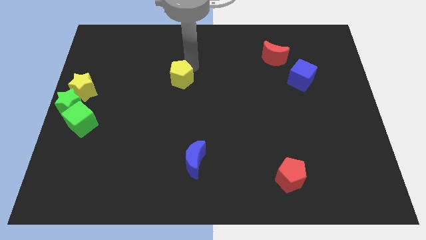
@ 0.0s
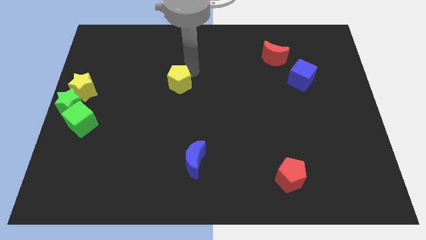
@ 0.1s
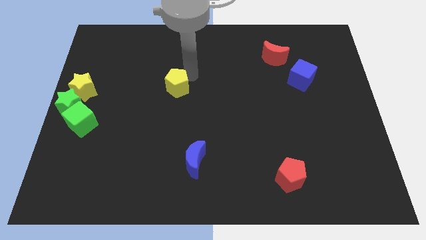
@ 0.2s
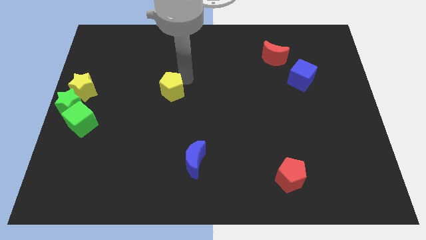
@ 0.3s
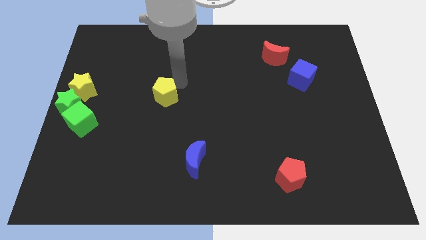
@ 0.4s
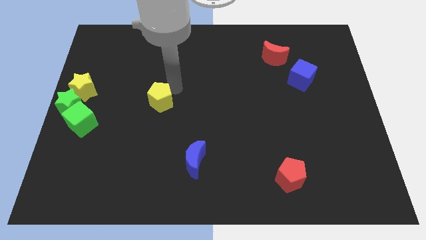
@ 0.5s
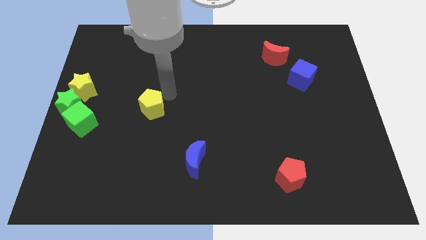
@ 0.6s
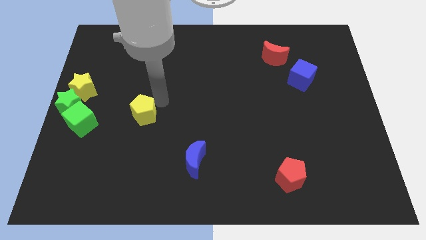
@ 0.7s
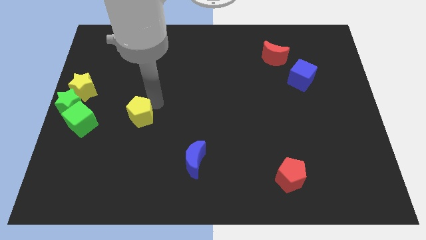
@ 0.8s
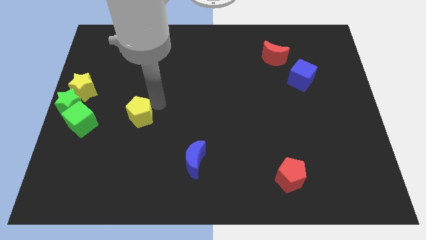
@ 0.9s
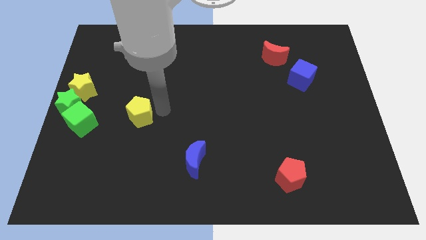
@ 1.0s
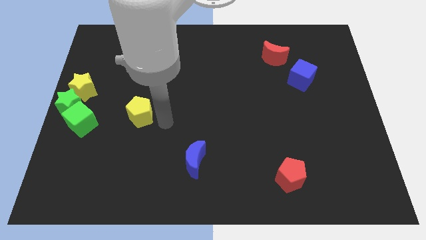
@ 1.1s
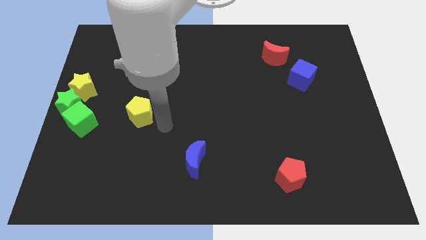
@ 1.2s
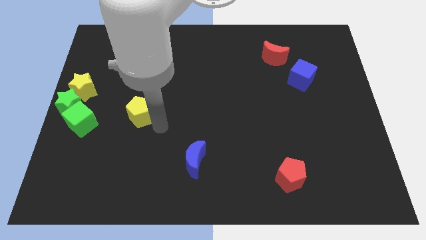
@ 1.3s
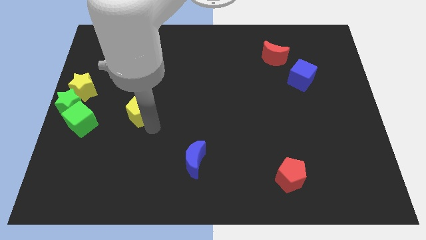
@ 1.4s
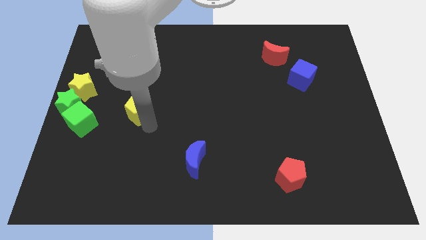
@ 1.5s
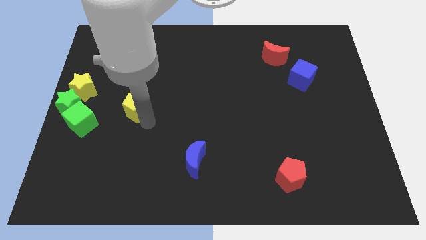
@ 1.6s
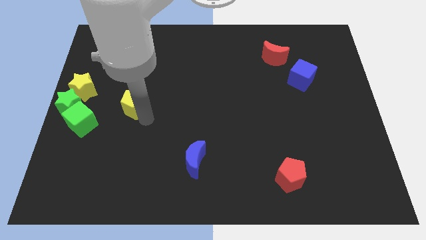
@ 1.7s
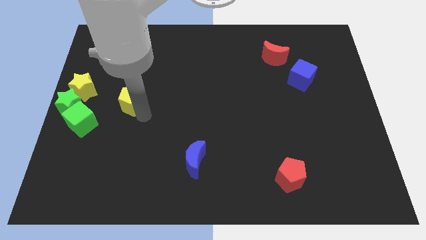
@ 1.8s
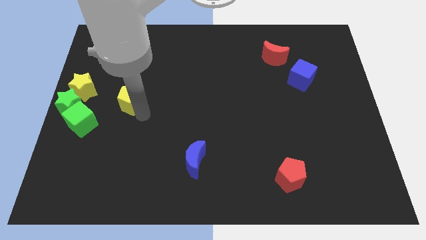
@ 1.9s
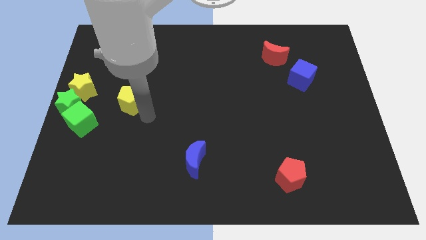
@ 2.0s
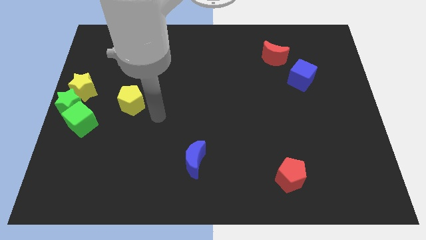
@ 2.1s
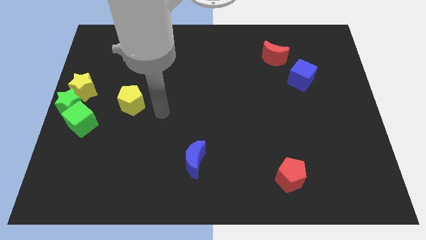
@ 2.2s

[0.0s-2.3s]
move the yellow pentagon towards group of blocks

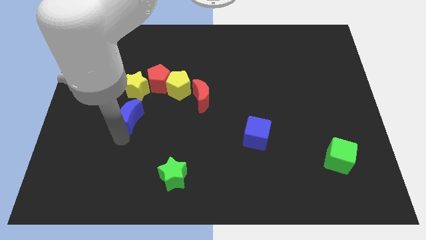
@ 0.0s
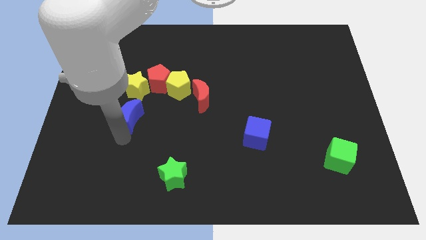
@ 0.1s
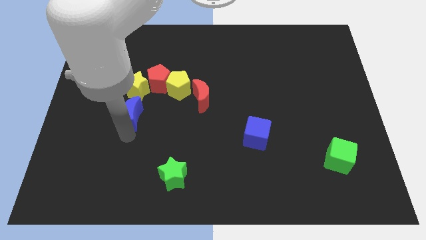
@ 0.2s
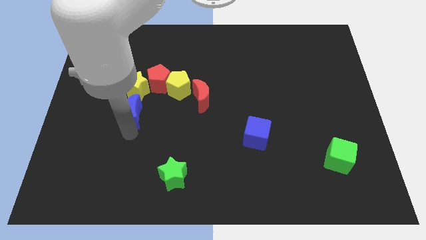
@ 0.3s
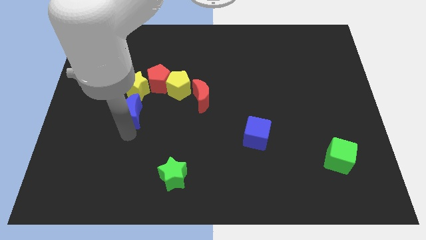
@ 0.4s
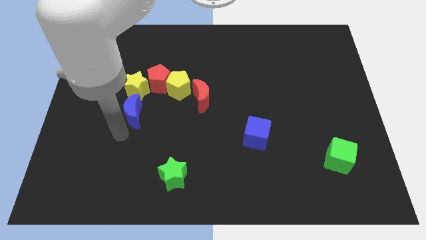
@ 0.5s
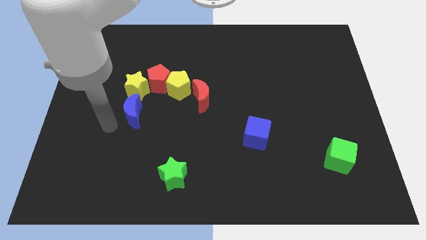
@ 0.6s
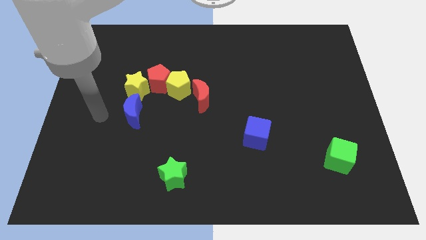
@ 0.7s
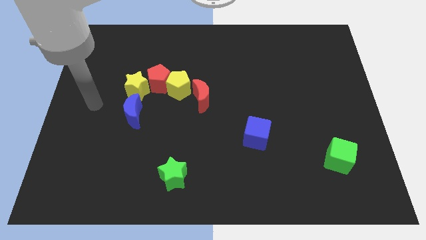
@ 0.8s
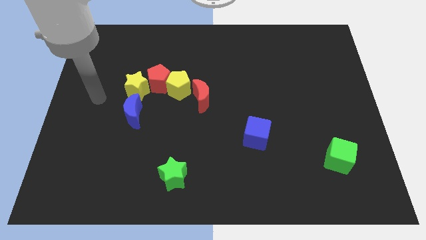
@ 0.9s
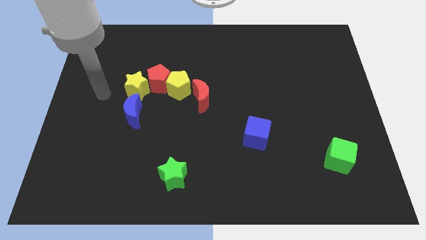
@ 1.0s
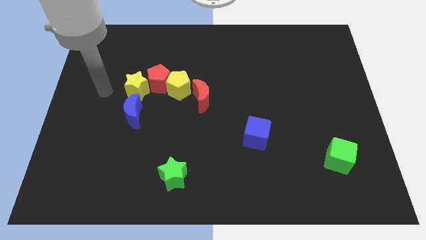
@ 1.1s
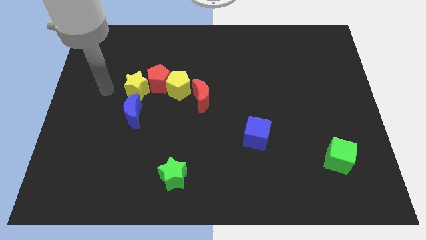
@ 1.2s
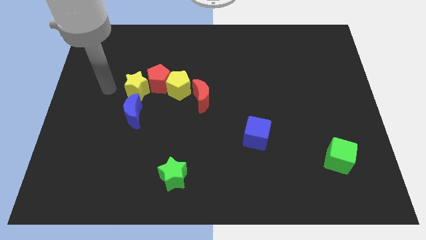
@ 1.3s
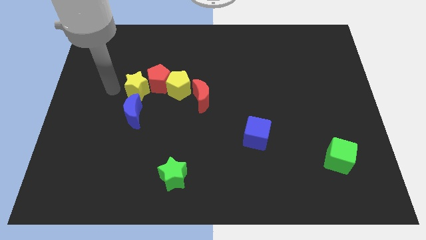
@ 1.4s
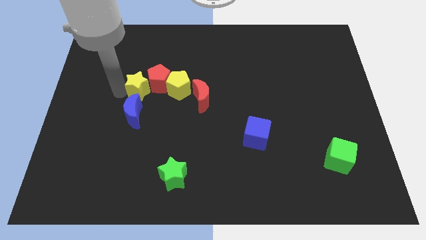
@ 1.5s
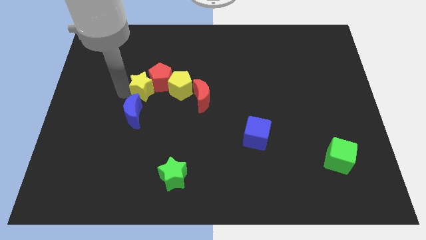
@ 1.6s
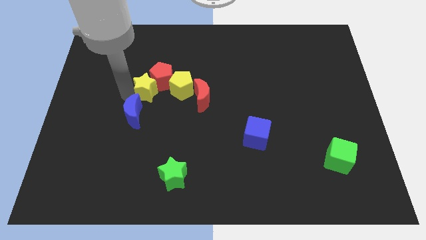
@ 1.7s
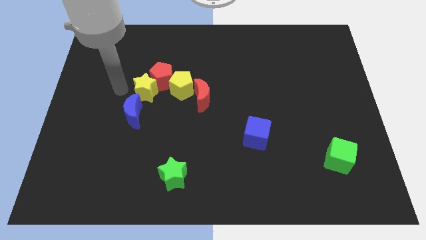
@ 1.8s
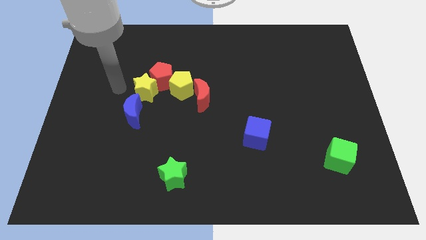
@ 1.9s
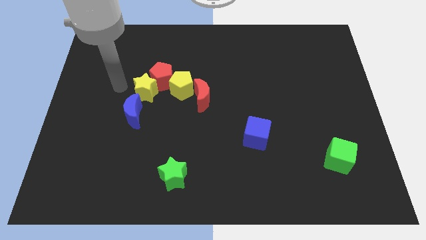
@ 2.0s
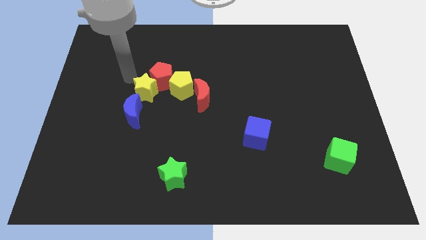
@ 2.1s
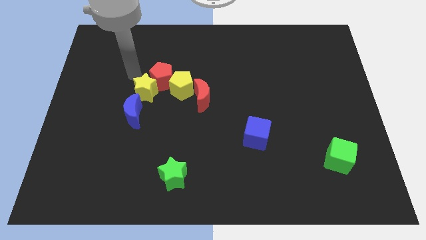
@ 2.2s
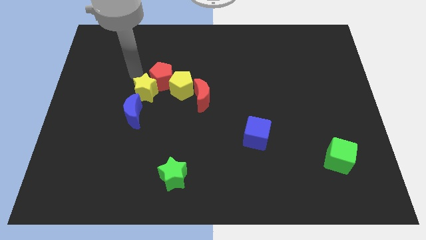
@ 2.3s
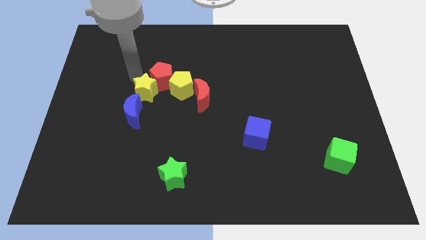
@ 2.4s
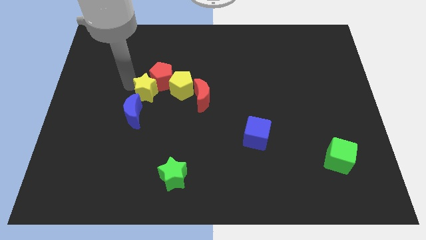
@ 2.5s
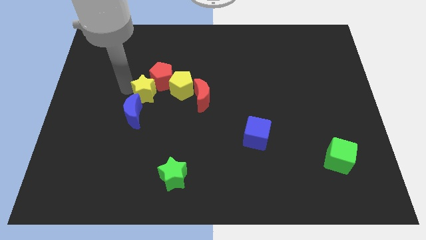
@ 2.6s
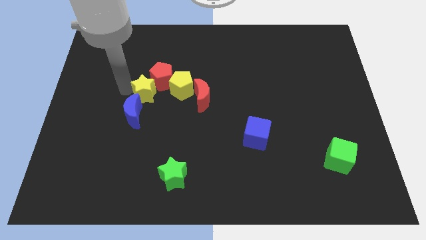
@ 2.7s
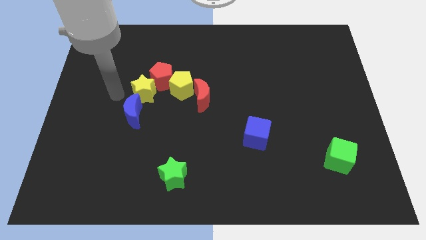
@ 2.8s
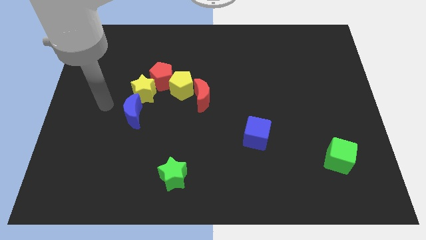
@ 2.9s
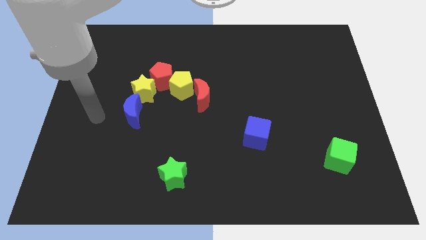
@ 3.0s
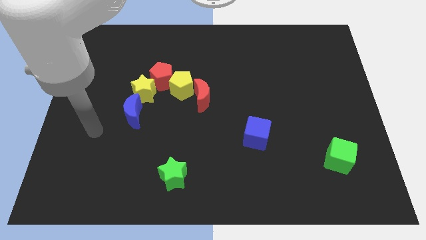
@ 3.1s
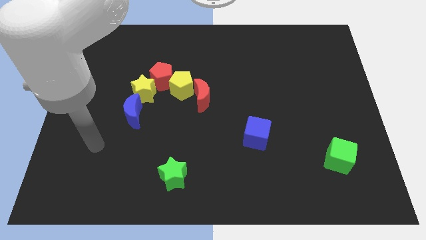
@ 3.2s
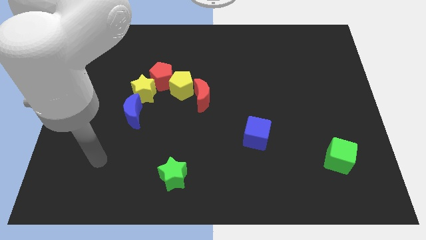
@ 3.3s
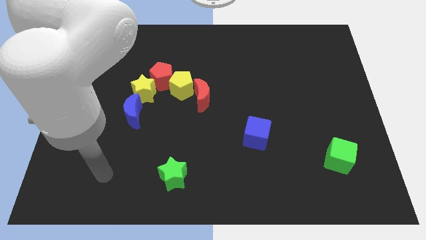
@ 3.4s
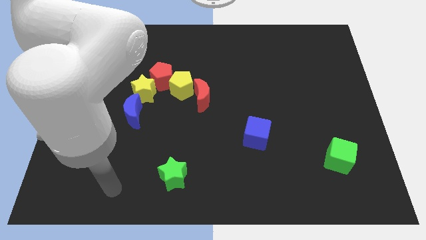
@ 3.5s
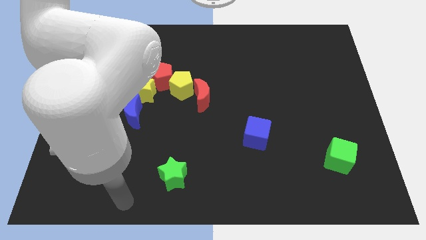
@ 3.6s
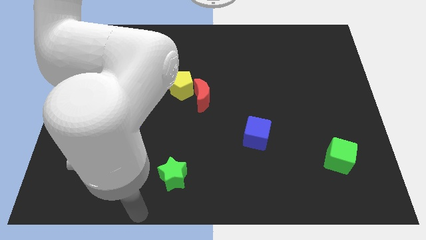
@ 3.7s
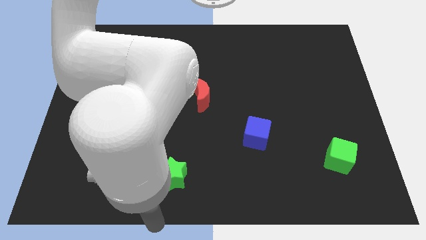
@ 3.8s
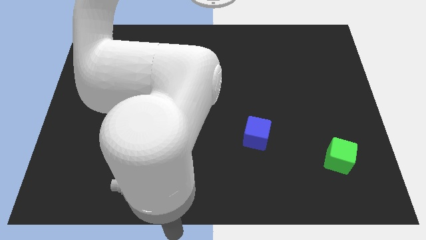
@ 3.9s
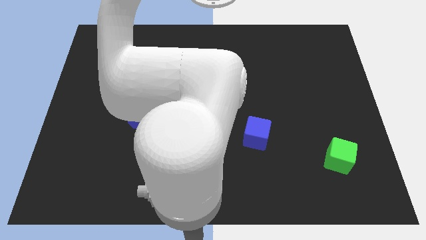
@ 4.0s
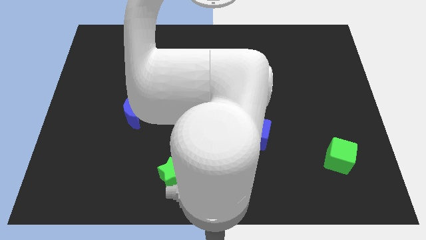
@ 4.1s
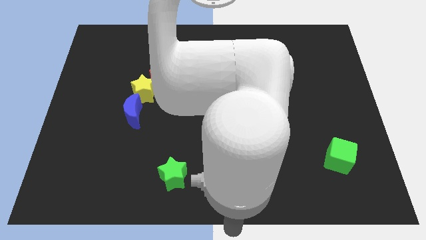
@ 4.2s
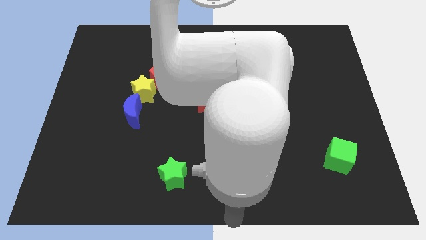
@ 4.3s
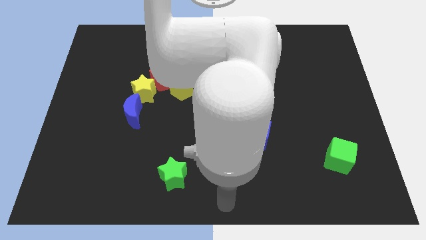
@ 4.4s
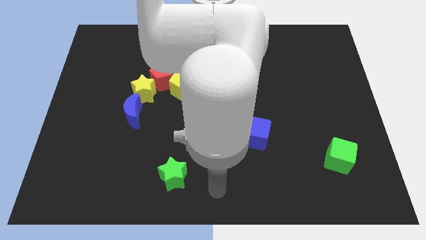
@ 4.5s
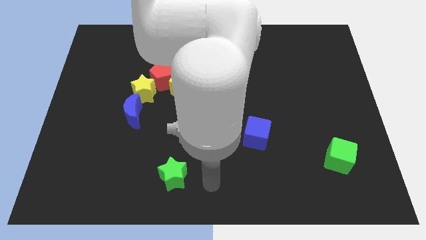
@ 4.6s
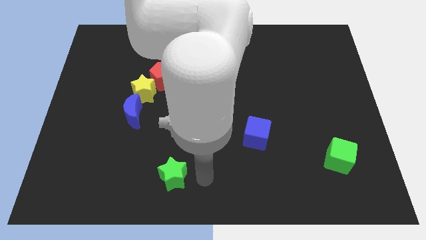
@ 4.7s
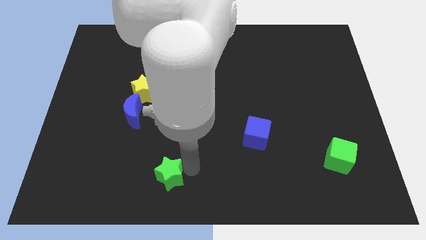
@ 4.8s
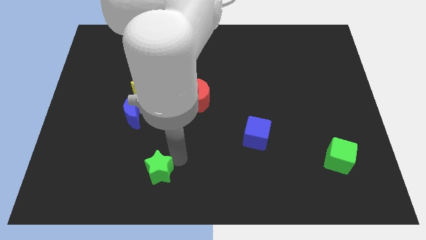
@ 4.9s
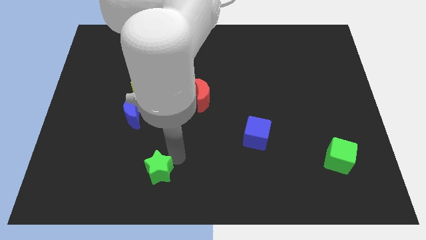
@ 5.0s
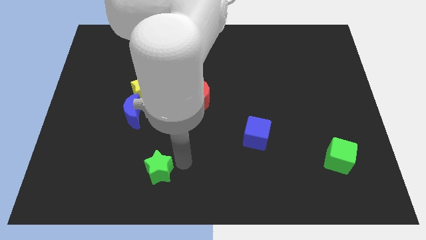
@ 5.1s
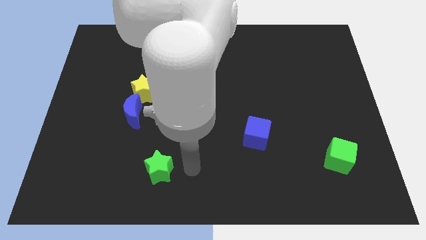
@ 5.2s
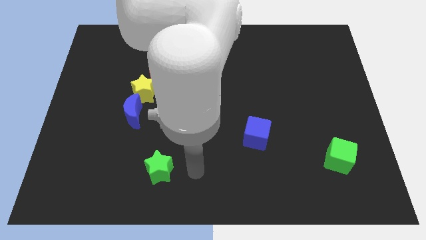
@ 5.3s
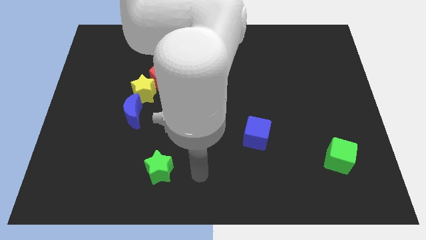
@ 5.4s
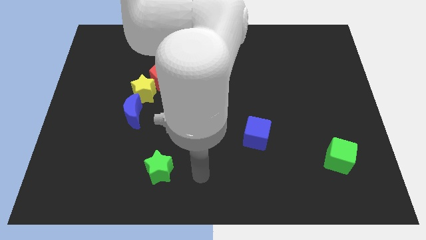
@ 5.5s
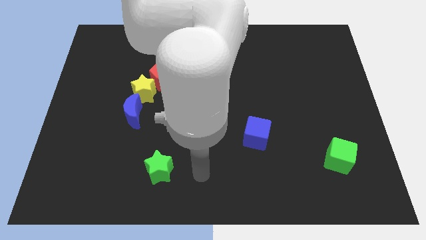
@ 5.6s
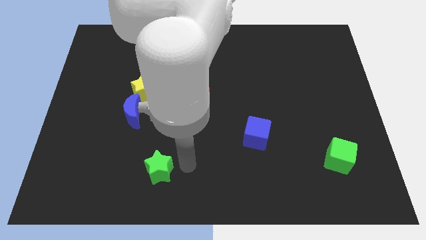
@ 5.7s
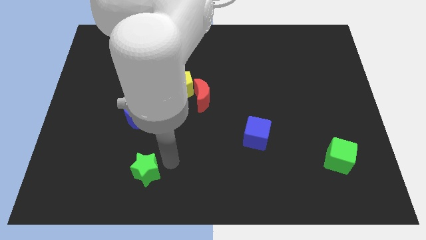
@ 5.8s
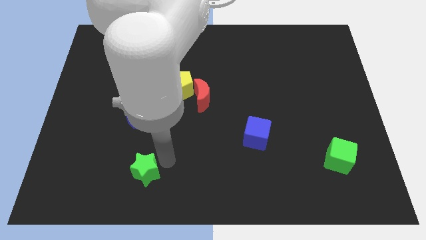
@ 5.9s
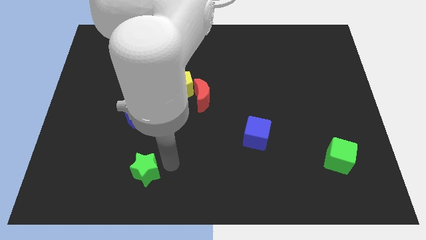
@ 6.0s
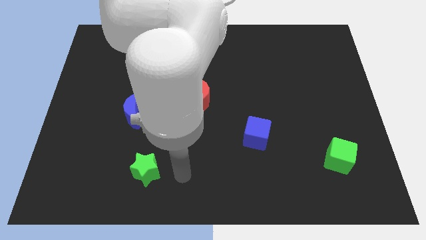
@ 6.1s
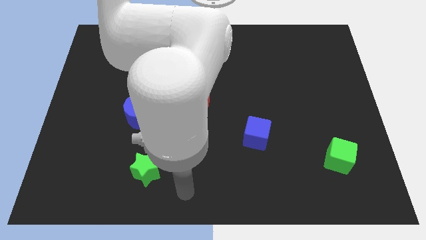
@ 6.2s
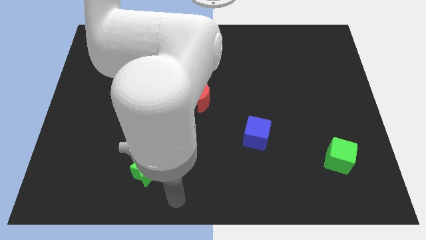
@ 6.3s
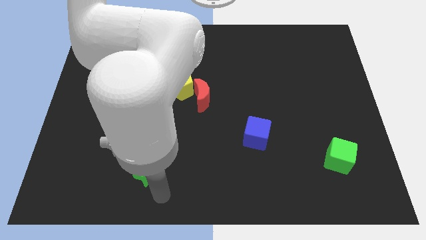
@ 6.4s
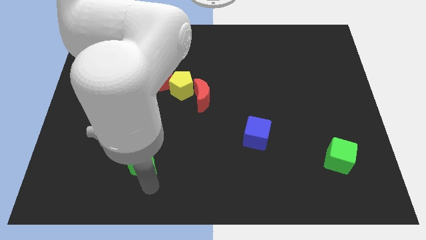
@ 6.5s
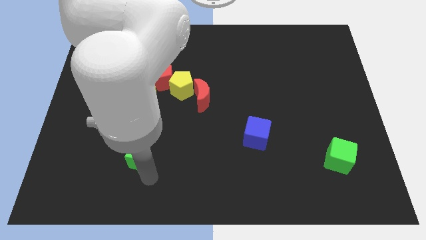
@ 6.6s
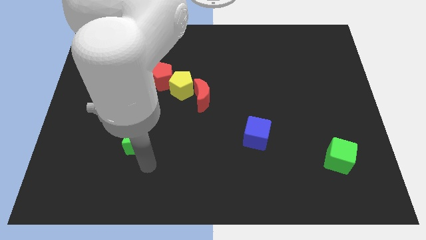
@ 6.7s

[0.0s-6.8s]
push the green star close to the blue moon
